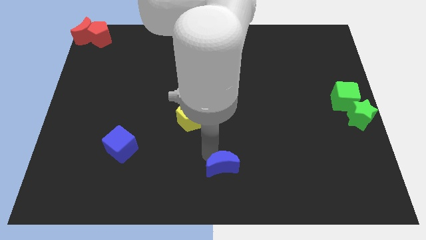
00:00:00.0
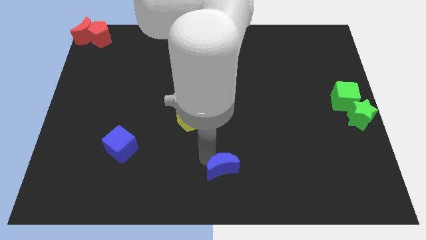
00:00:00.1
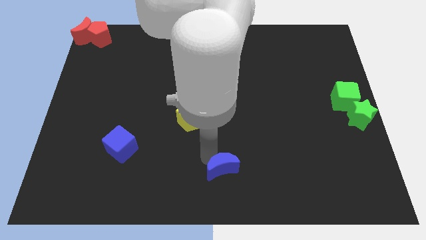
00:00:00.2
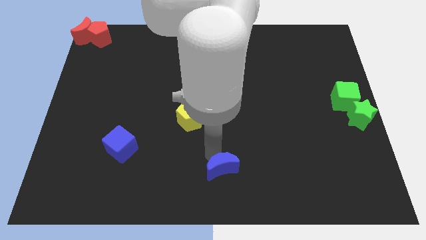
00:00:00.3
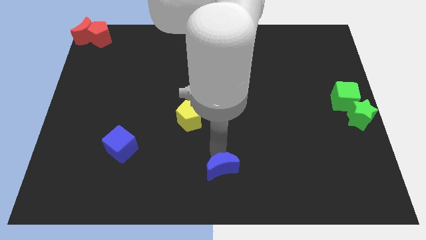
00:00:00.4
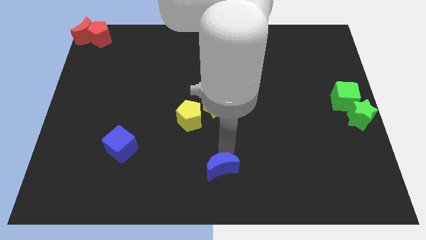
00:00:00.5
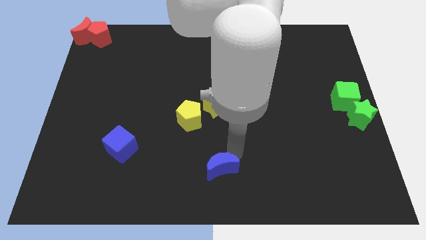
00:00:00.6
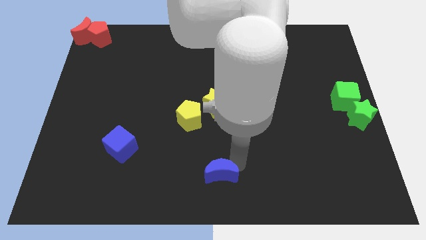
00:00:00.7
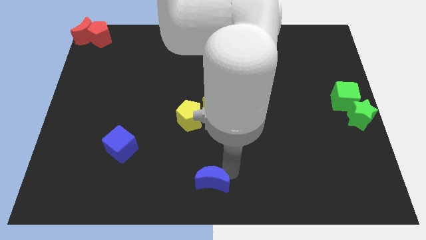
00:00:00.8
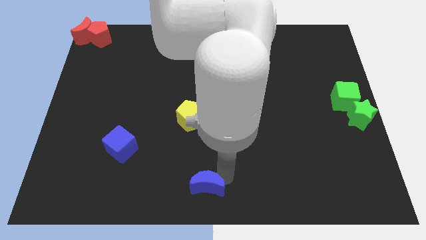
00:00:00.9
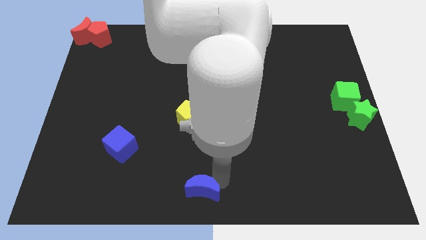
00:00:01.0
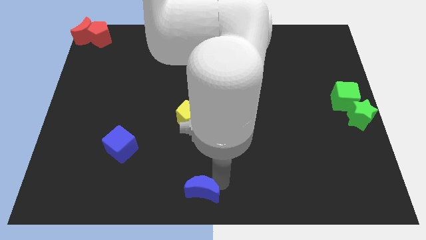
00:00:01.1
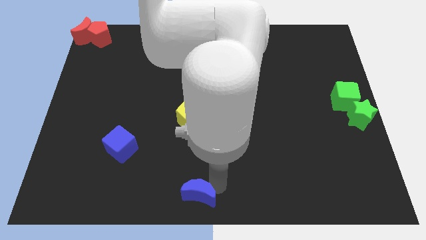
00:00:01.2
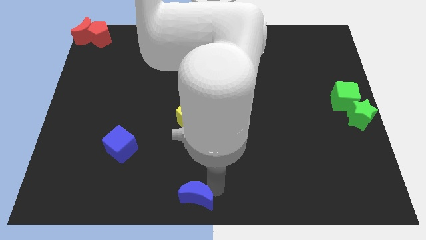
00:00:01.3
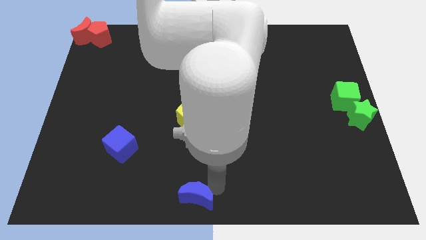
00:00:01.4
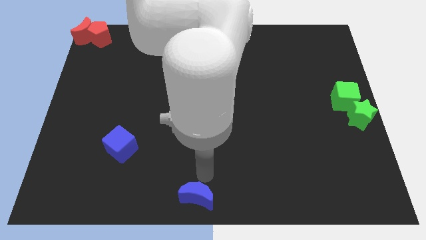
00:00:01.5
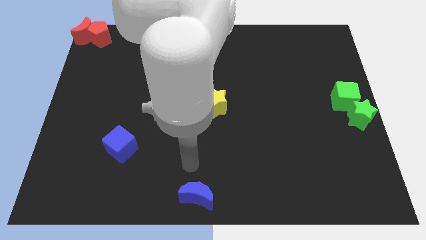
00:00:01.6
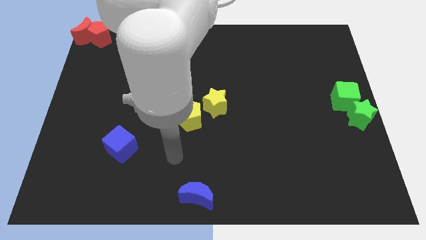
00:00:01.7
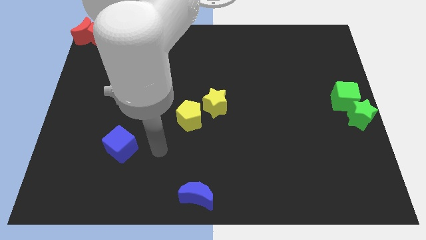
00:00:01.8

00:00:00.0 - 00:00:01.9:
move the blue crescent to the bottom center of the board

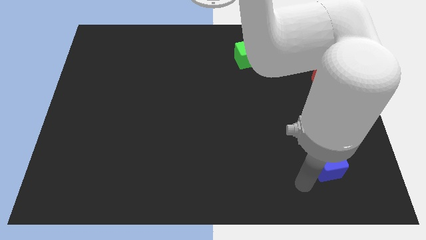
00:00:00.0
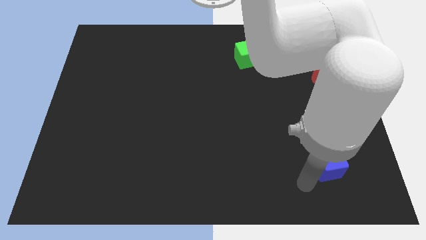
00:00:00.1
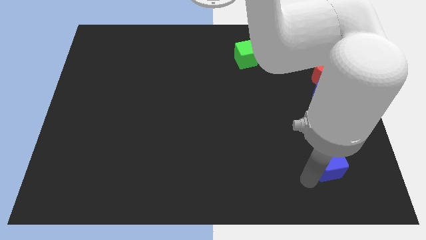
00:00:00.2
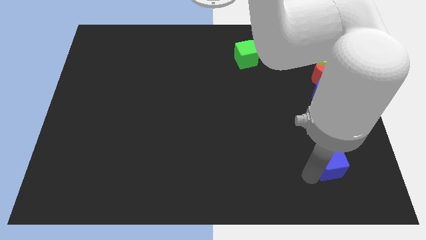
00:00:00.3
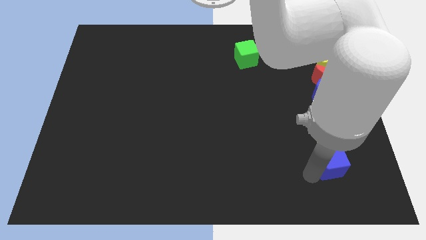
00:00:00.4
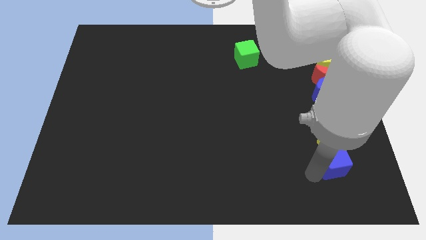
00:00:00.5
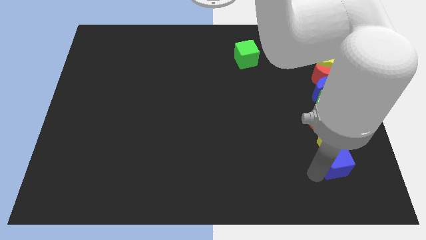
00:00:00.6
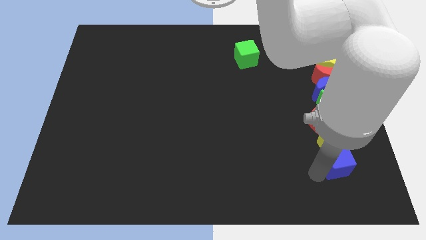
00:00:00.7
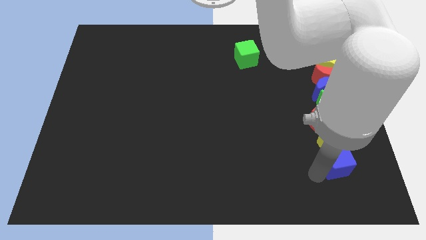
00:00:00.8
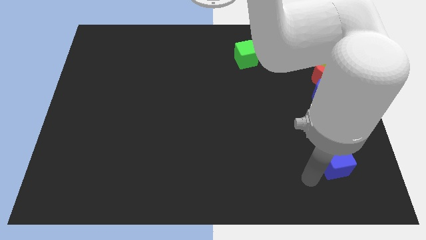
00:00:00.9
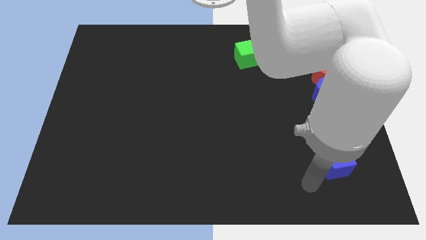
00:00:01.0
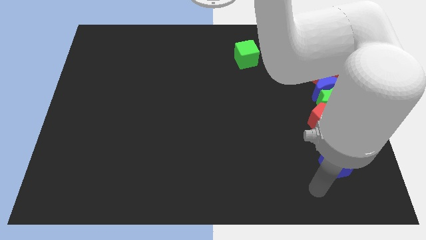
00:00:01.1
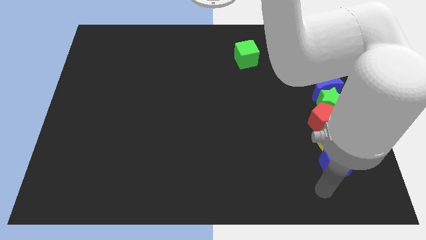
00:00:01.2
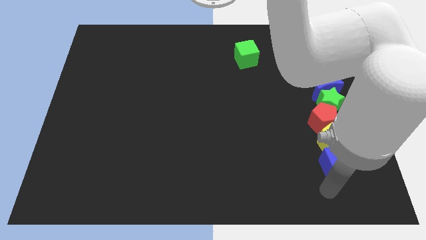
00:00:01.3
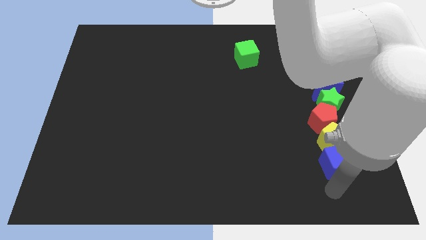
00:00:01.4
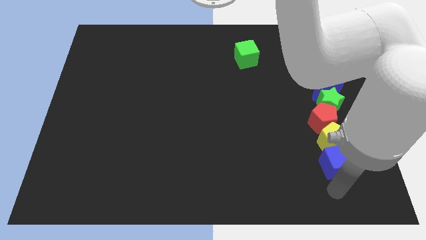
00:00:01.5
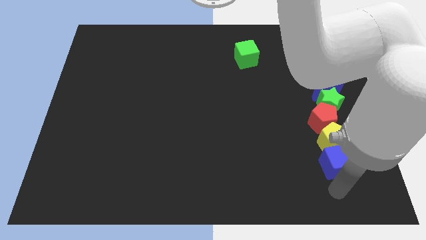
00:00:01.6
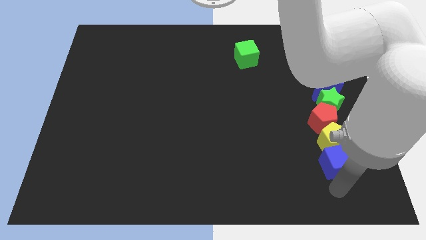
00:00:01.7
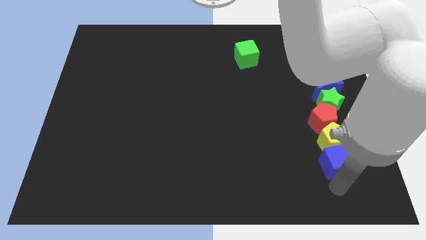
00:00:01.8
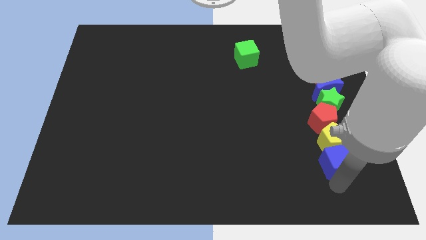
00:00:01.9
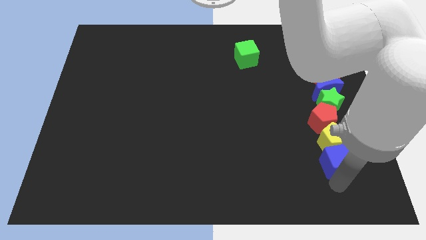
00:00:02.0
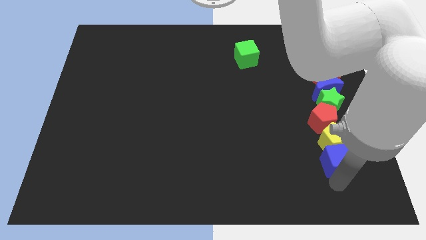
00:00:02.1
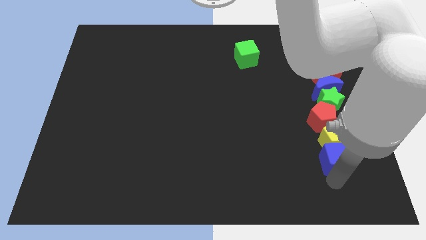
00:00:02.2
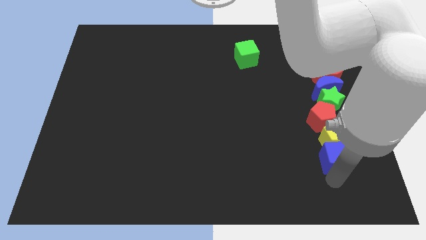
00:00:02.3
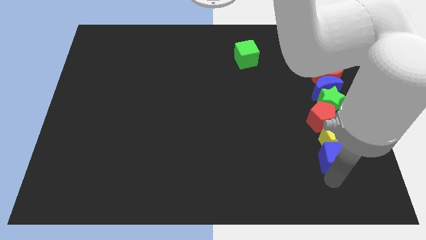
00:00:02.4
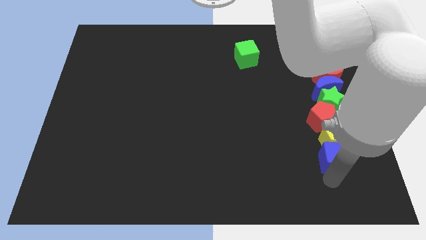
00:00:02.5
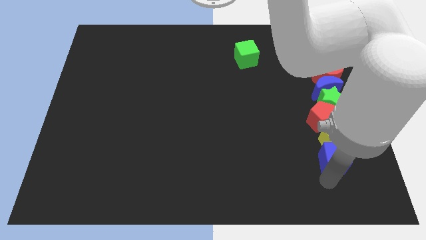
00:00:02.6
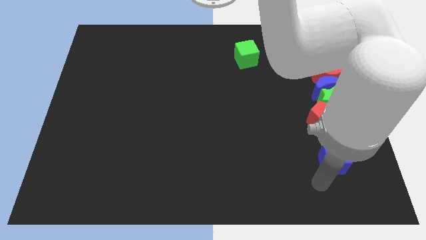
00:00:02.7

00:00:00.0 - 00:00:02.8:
move the blue cube into the yellow pentagon

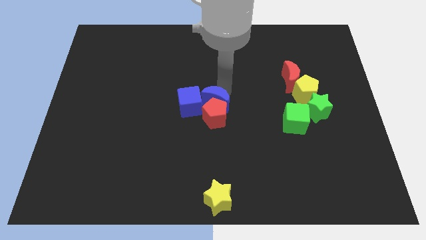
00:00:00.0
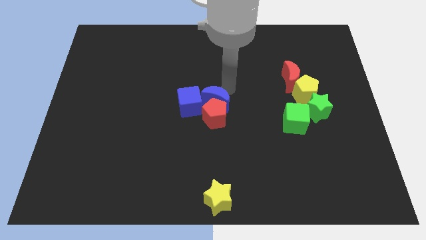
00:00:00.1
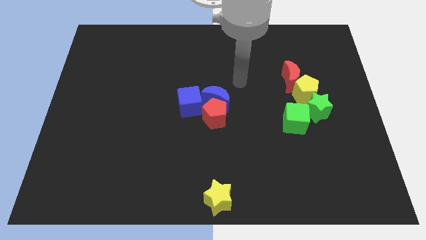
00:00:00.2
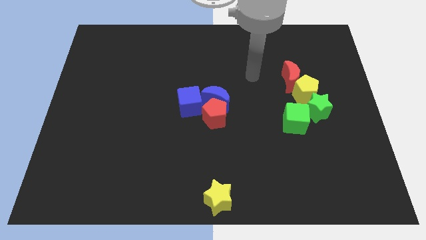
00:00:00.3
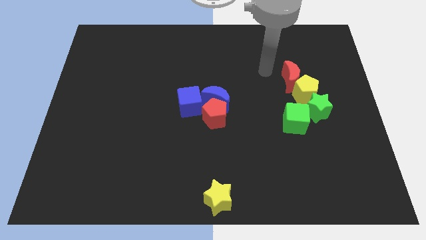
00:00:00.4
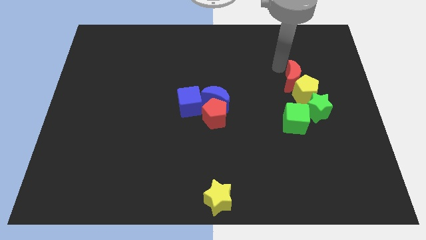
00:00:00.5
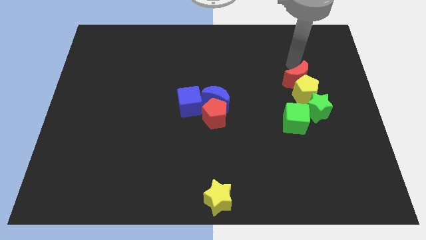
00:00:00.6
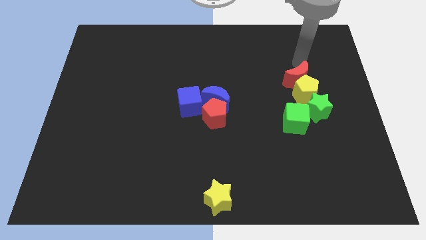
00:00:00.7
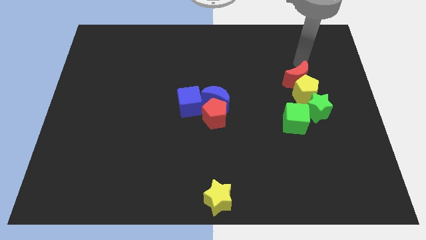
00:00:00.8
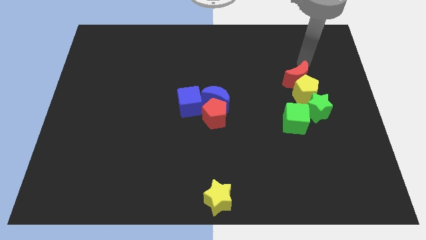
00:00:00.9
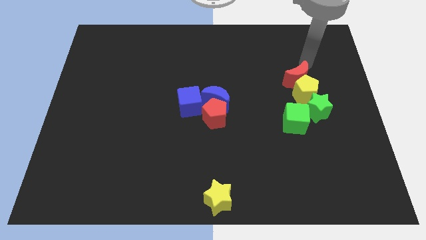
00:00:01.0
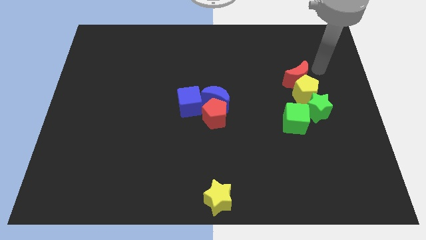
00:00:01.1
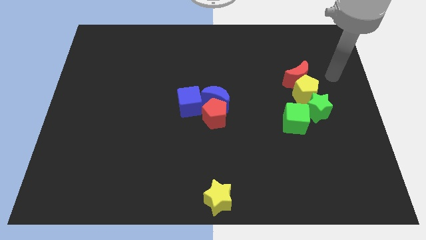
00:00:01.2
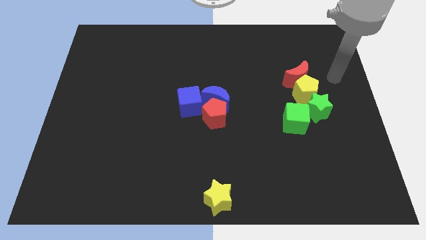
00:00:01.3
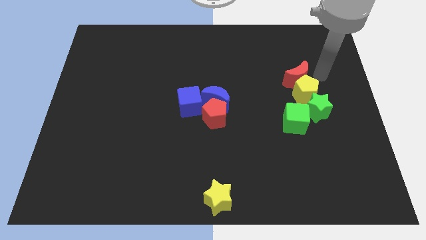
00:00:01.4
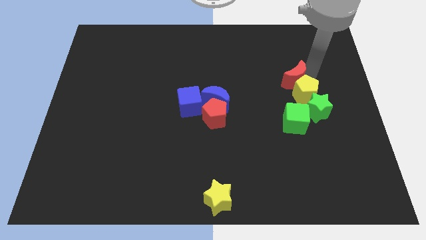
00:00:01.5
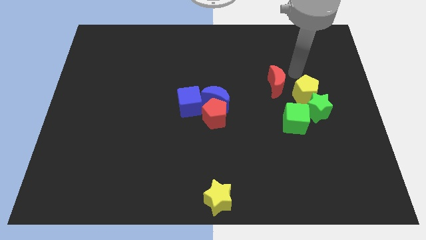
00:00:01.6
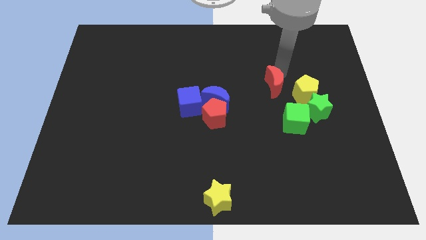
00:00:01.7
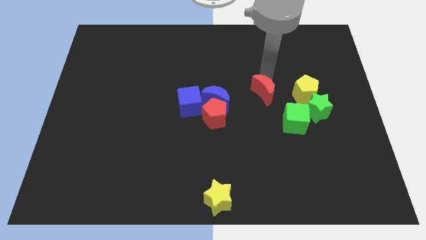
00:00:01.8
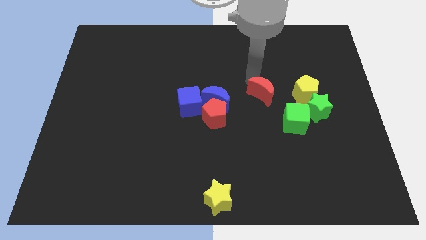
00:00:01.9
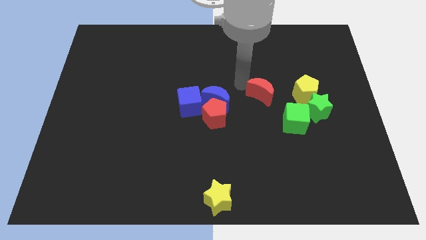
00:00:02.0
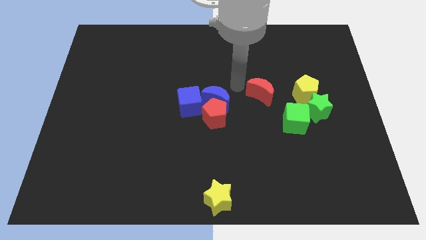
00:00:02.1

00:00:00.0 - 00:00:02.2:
place the red moon to the left of the yellow pentagon

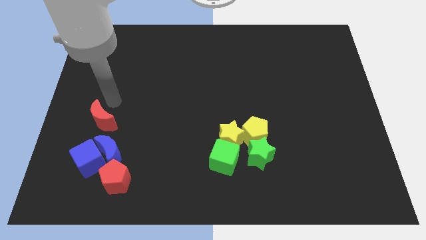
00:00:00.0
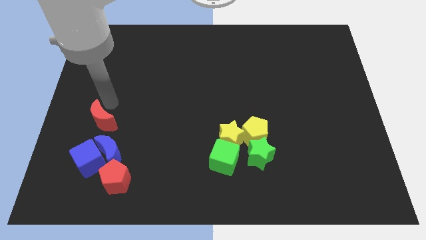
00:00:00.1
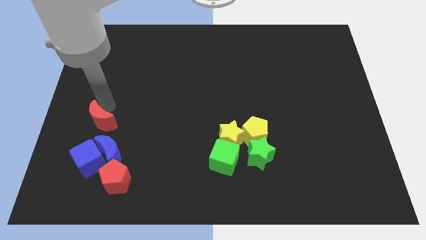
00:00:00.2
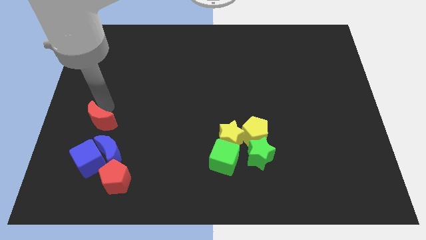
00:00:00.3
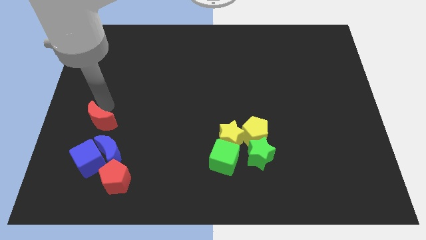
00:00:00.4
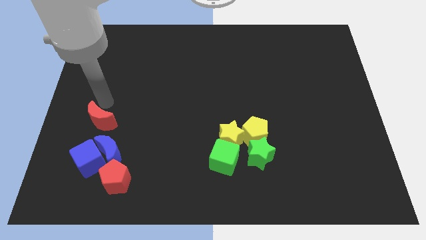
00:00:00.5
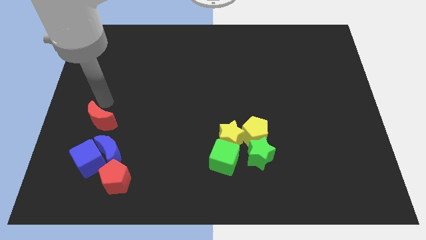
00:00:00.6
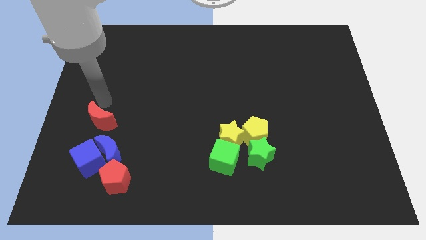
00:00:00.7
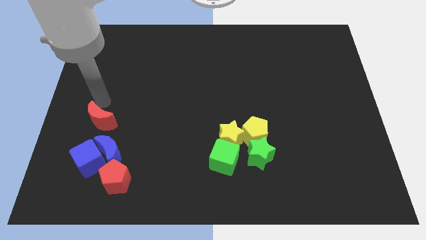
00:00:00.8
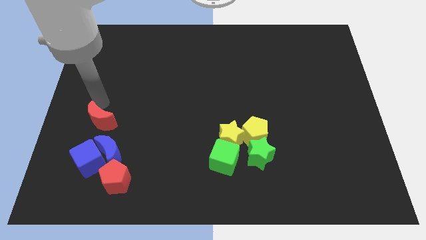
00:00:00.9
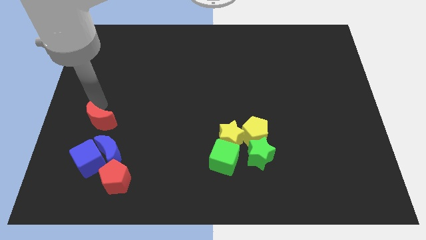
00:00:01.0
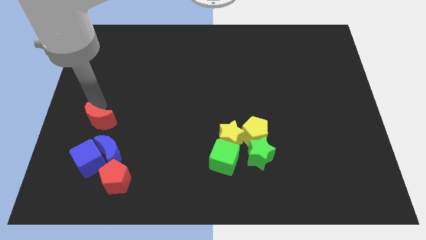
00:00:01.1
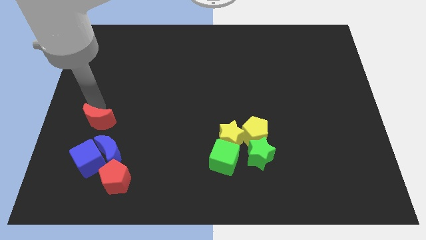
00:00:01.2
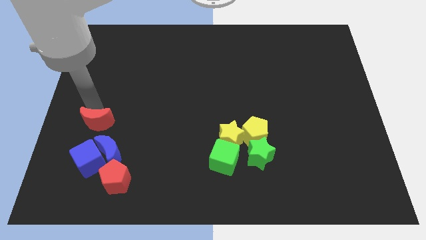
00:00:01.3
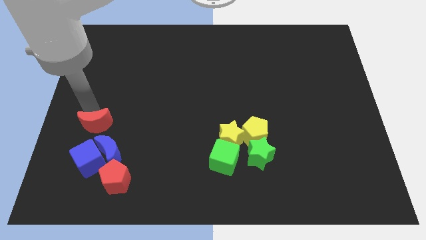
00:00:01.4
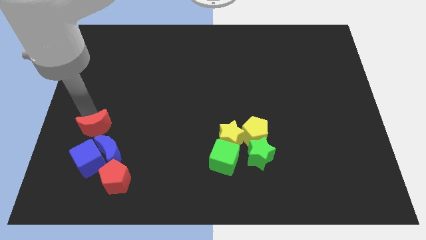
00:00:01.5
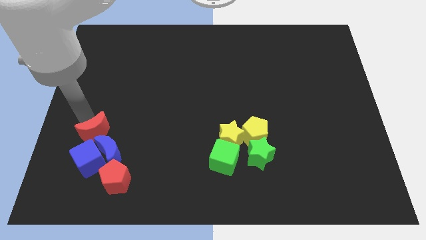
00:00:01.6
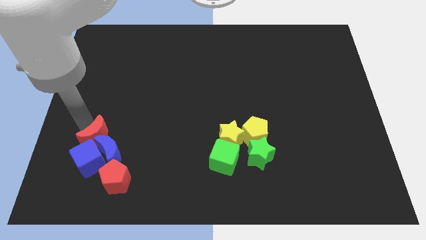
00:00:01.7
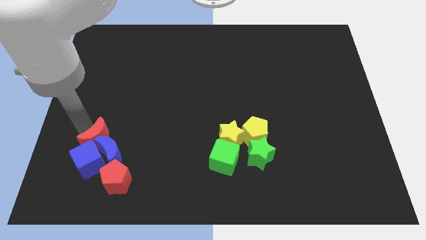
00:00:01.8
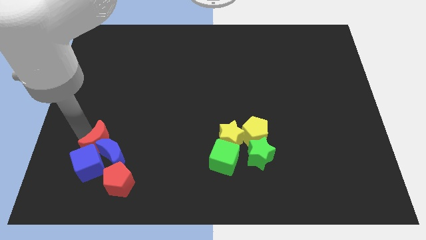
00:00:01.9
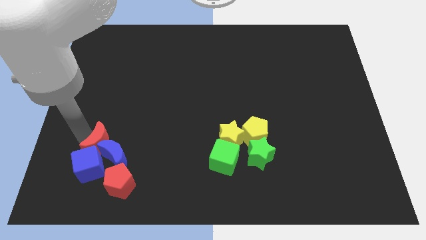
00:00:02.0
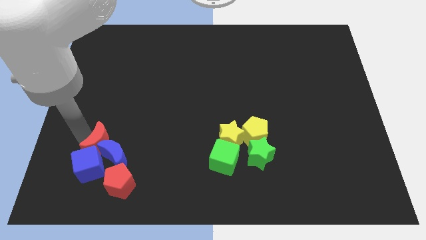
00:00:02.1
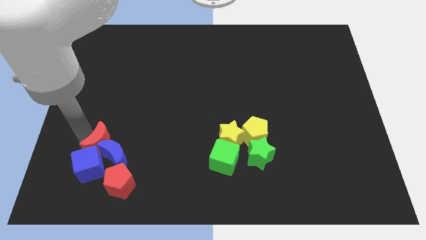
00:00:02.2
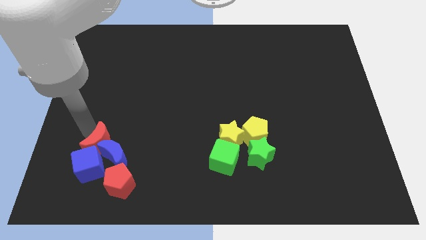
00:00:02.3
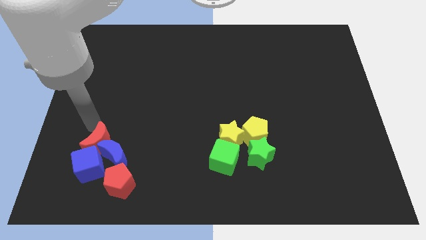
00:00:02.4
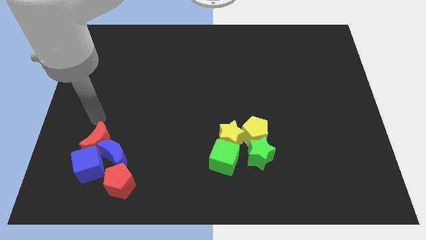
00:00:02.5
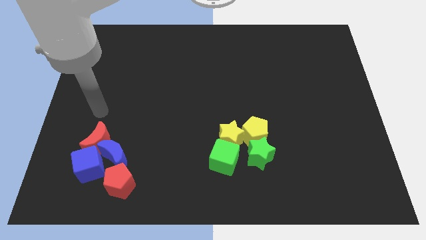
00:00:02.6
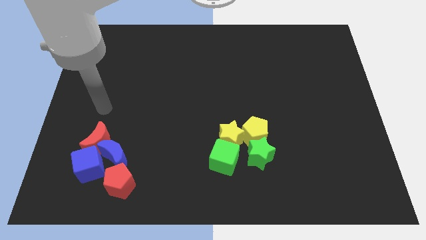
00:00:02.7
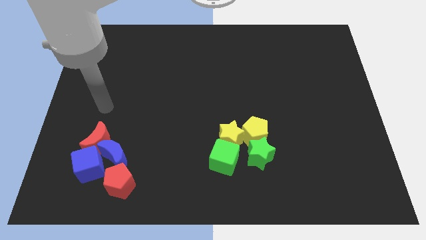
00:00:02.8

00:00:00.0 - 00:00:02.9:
push the red crescent into the group of blue blocks
